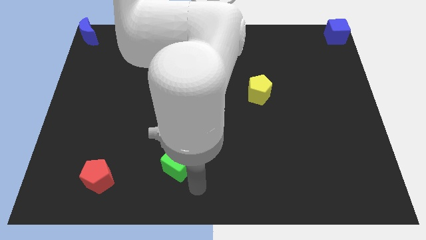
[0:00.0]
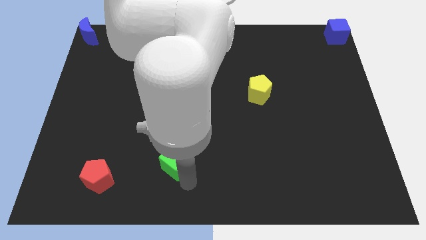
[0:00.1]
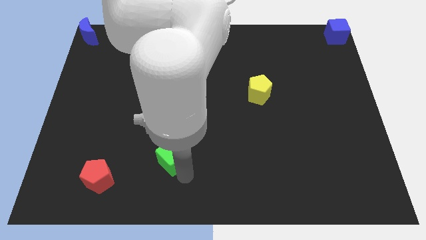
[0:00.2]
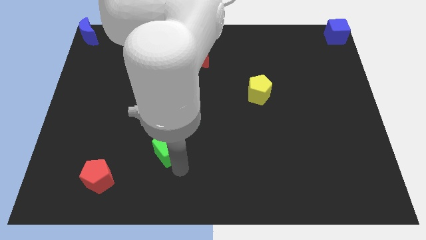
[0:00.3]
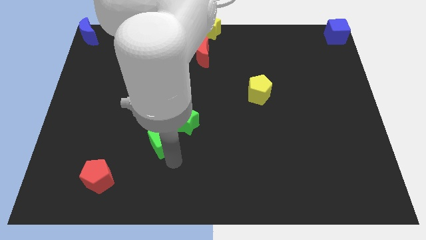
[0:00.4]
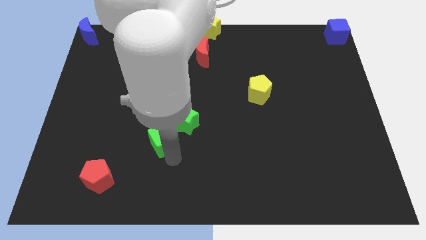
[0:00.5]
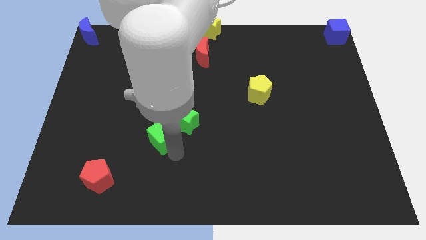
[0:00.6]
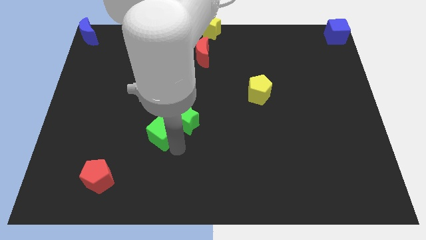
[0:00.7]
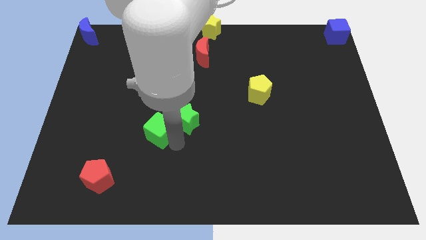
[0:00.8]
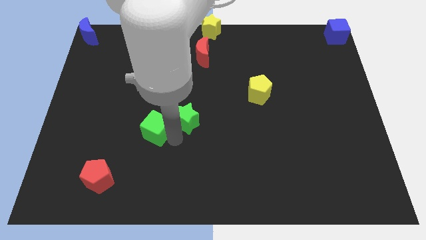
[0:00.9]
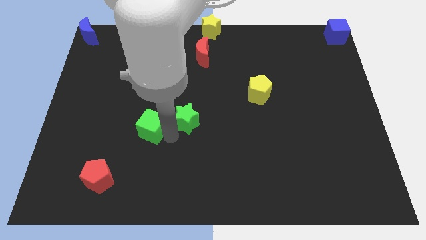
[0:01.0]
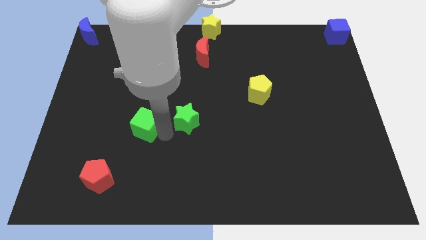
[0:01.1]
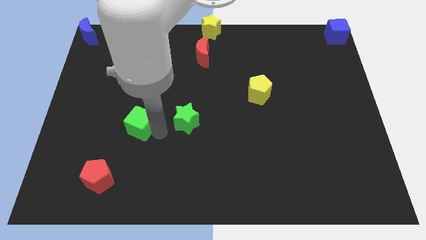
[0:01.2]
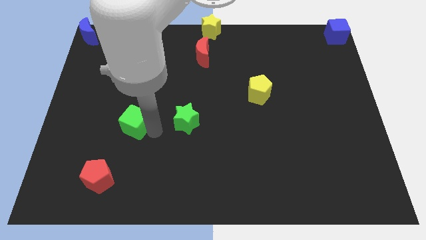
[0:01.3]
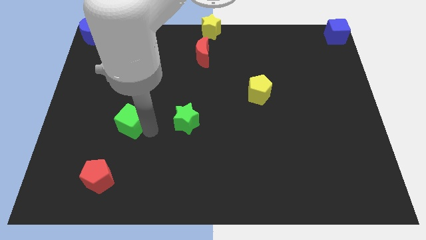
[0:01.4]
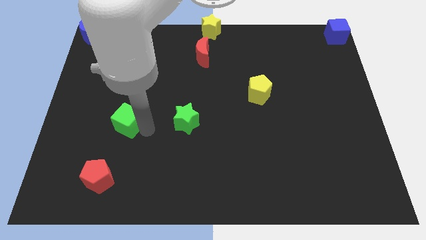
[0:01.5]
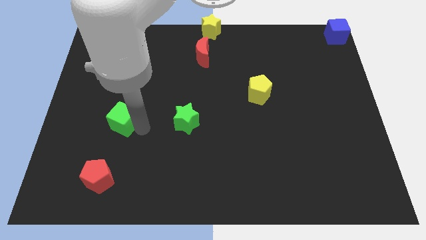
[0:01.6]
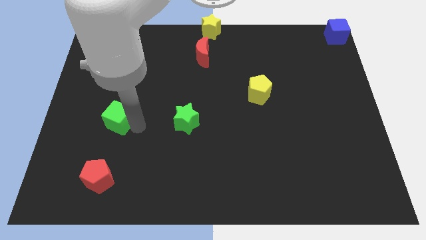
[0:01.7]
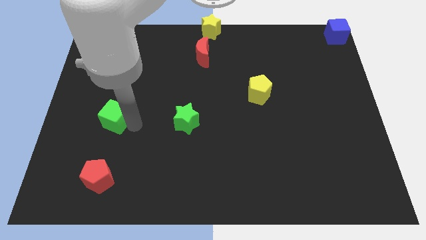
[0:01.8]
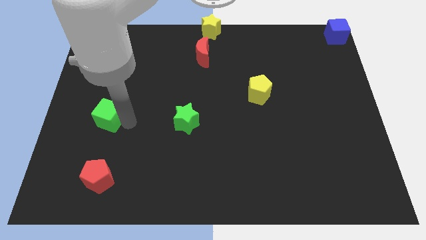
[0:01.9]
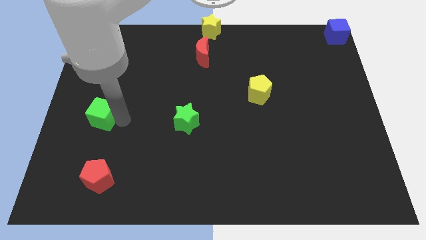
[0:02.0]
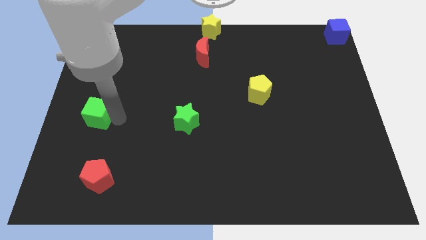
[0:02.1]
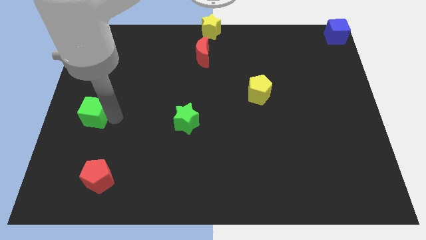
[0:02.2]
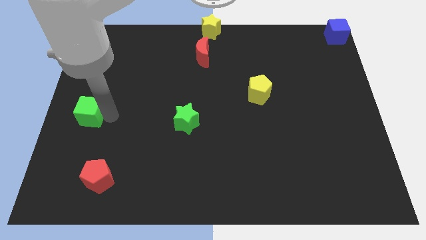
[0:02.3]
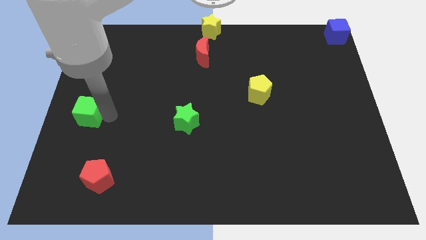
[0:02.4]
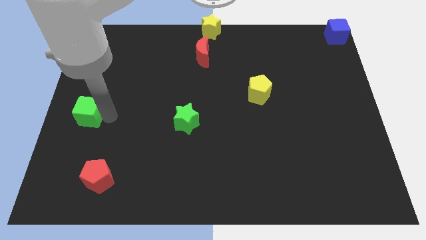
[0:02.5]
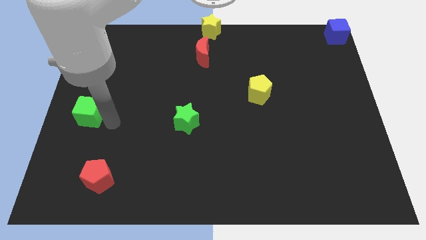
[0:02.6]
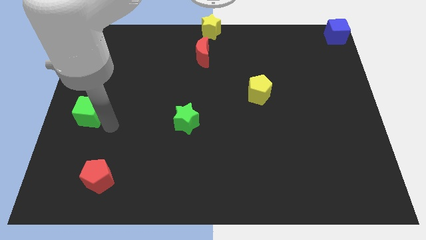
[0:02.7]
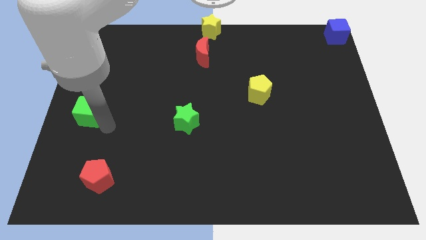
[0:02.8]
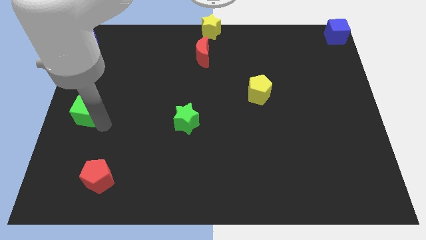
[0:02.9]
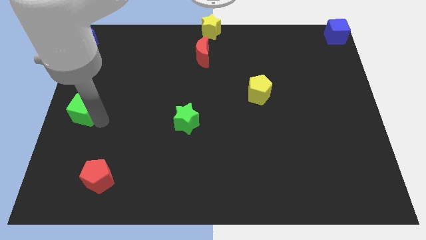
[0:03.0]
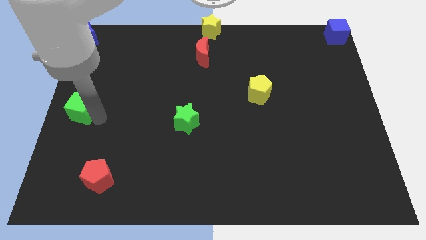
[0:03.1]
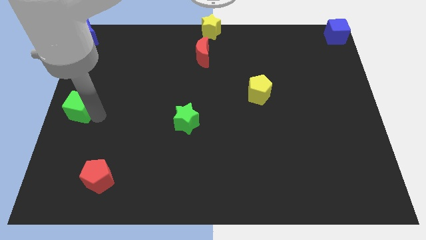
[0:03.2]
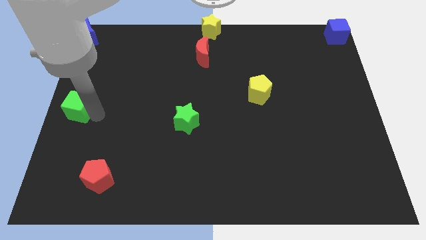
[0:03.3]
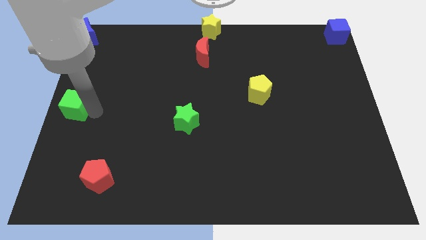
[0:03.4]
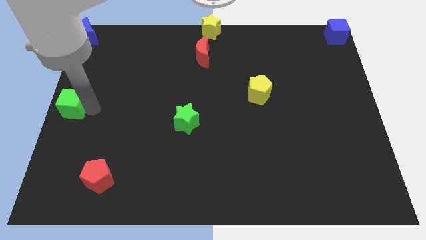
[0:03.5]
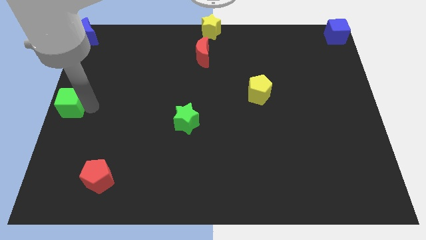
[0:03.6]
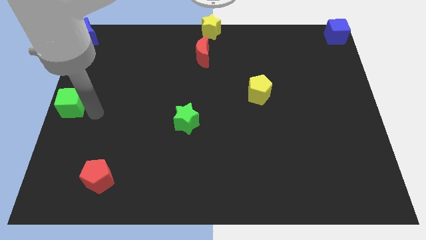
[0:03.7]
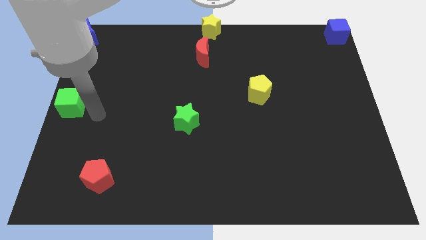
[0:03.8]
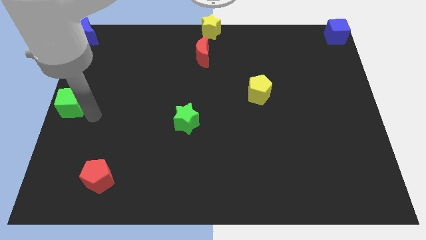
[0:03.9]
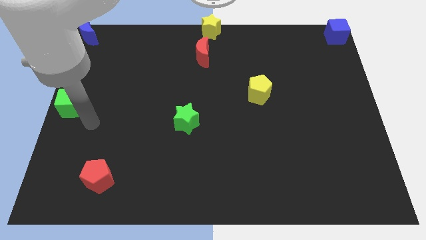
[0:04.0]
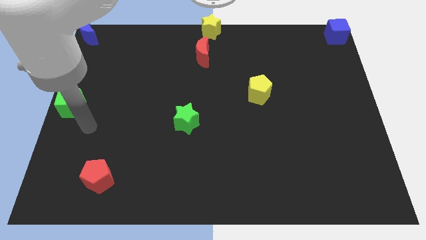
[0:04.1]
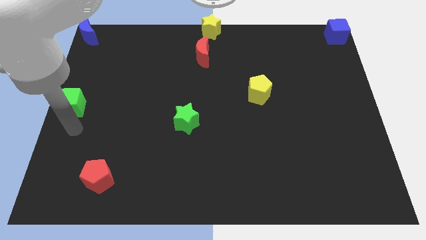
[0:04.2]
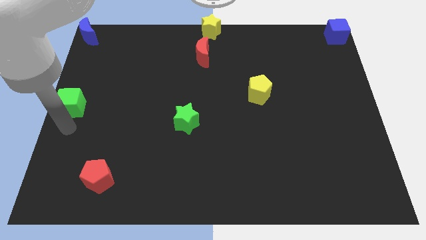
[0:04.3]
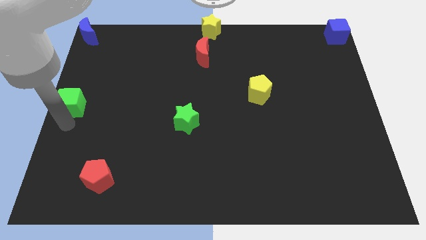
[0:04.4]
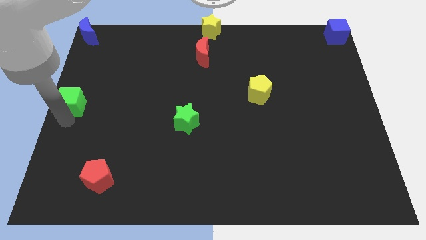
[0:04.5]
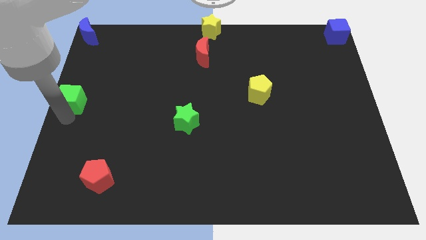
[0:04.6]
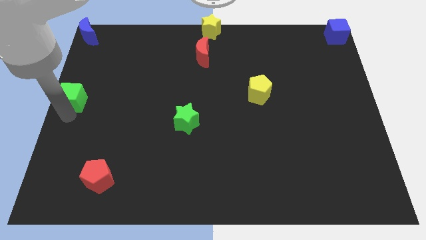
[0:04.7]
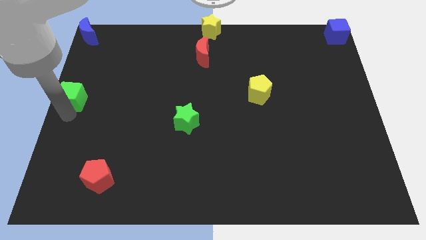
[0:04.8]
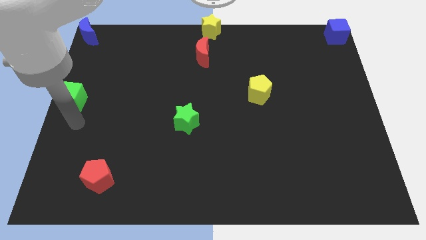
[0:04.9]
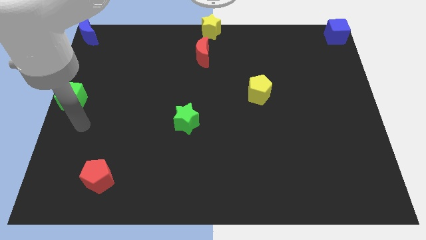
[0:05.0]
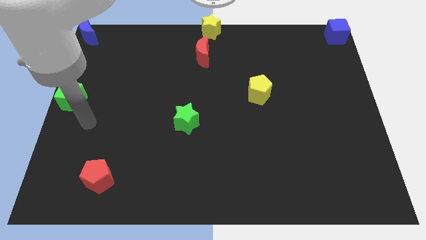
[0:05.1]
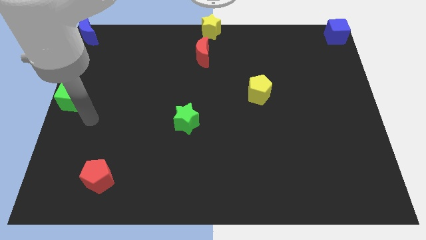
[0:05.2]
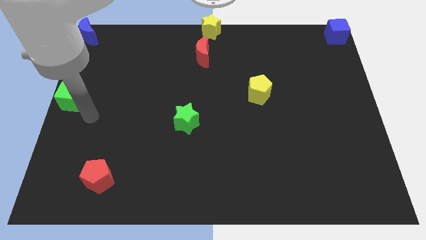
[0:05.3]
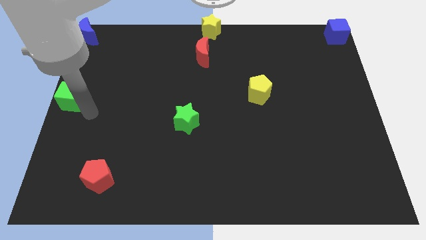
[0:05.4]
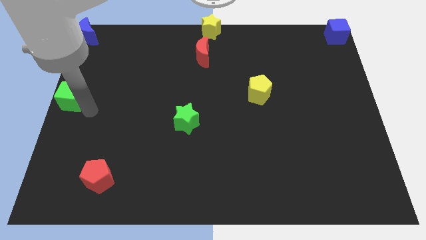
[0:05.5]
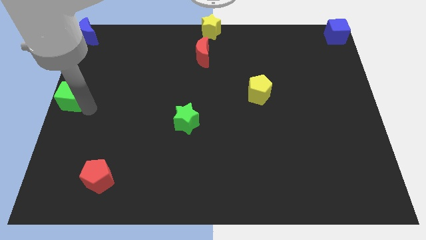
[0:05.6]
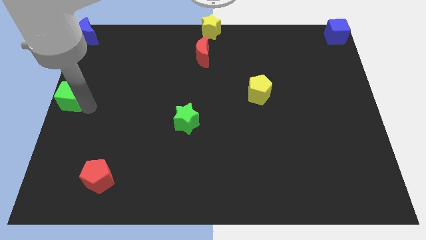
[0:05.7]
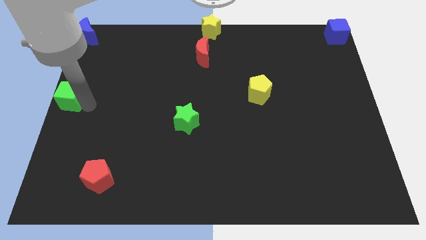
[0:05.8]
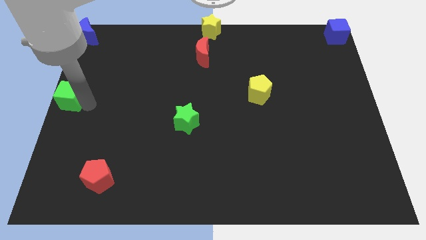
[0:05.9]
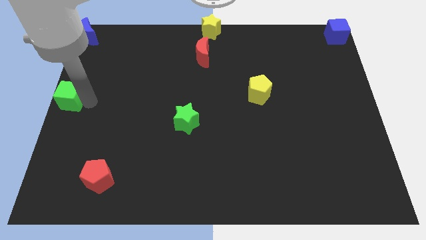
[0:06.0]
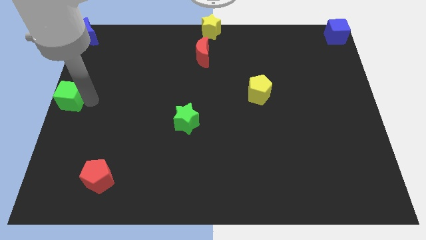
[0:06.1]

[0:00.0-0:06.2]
push the green cube to the left side center of the board

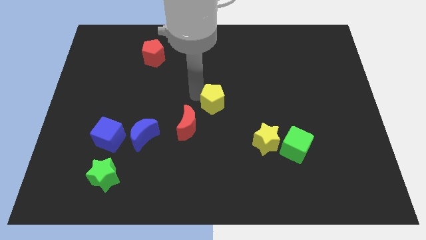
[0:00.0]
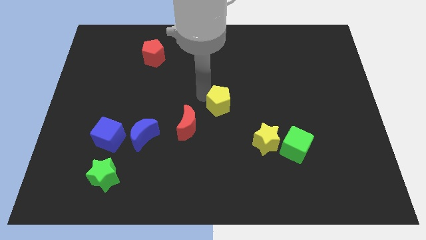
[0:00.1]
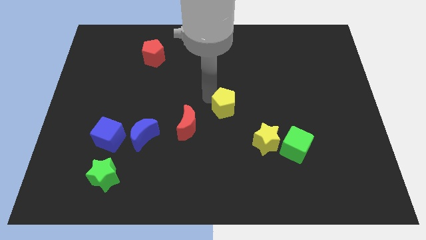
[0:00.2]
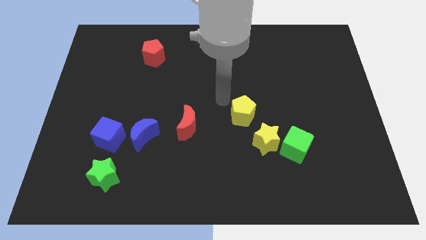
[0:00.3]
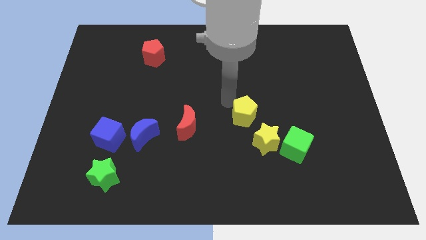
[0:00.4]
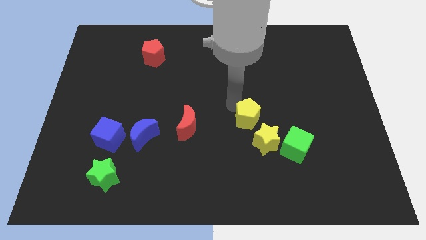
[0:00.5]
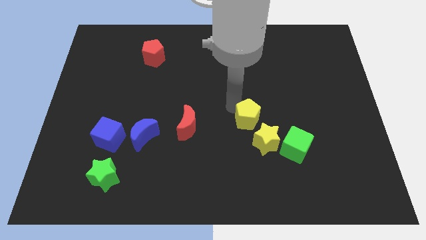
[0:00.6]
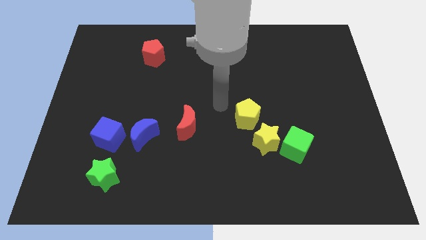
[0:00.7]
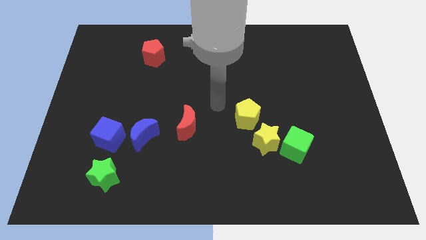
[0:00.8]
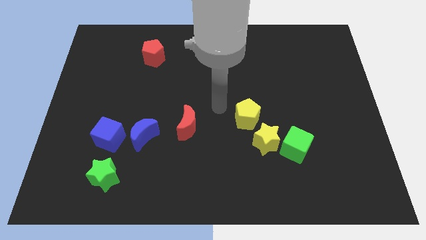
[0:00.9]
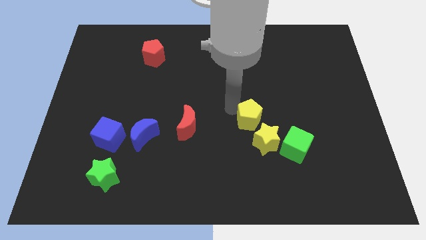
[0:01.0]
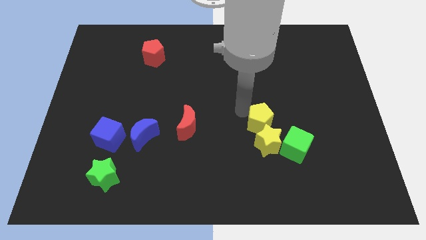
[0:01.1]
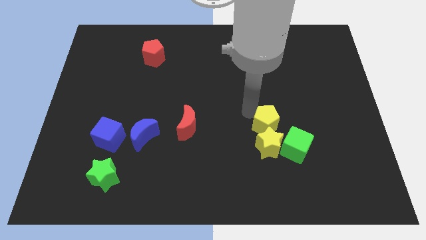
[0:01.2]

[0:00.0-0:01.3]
push the yellow pentagon into the yellow star

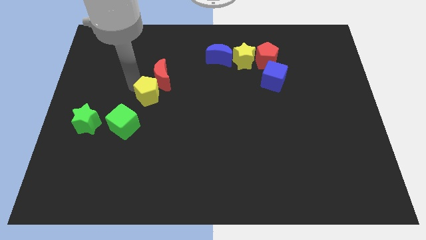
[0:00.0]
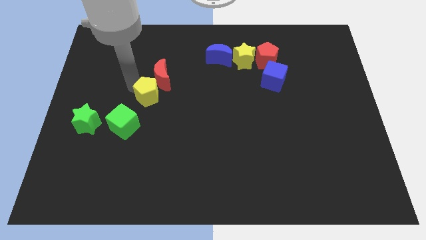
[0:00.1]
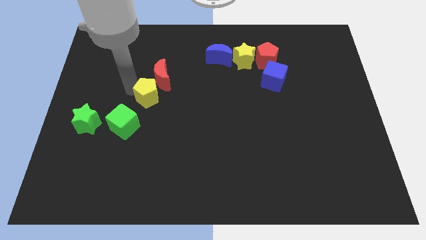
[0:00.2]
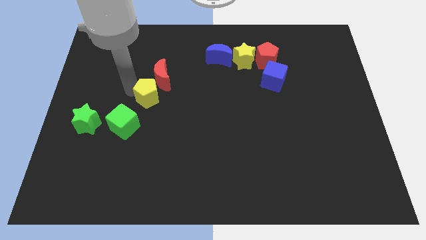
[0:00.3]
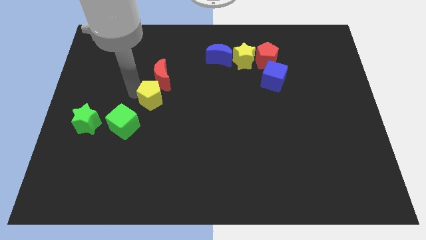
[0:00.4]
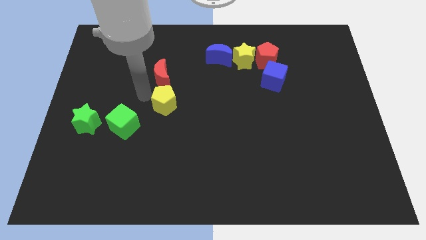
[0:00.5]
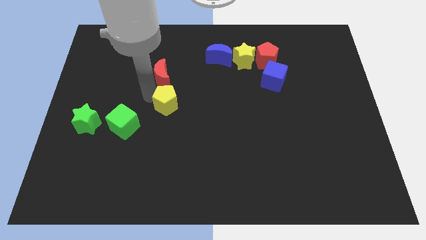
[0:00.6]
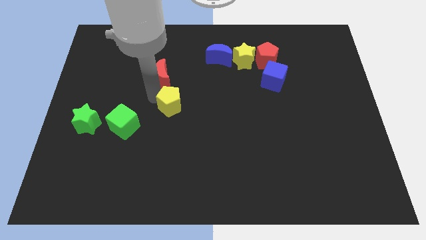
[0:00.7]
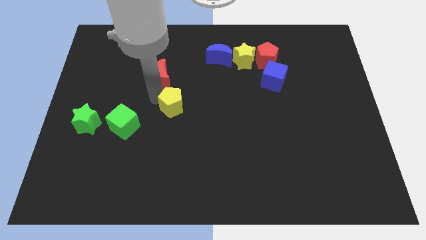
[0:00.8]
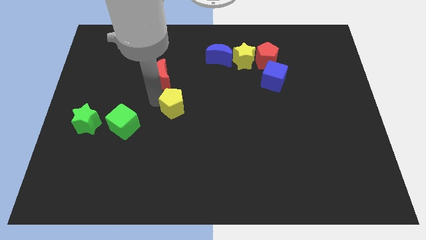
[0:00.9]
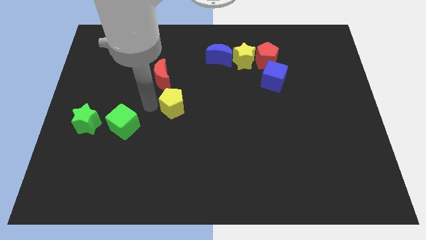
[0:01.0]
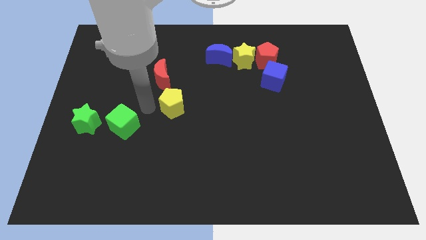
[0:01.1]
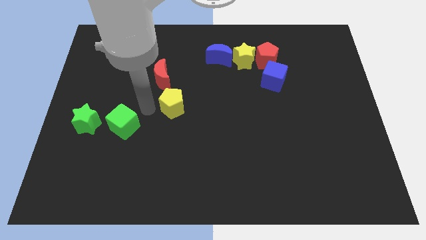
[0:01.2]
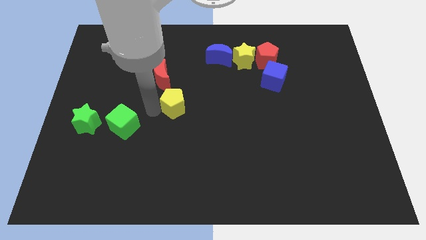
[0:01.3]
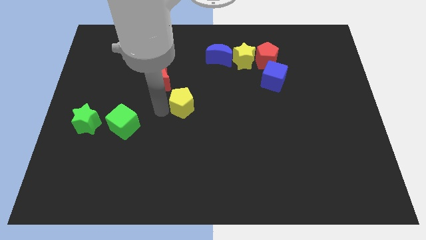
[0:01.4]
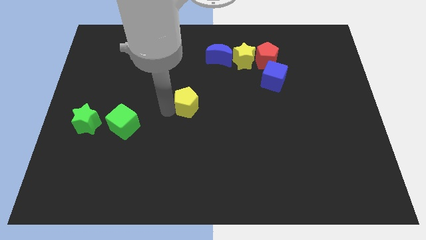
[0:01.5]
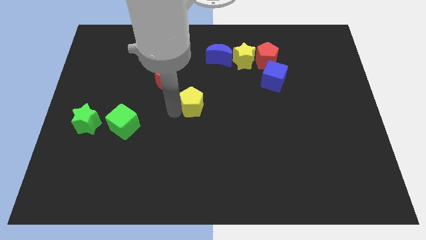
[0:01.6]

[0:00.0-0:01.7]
place the yellow pentagon below the red moon
